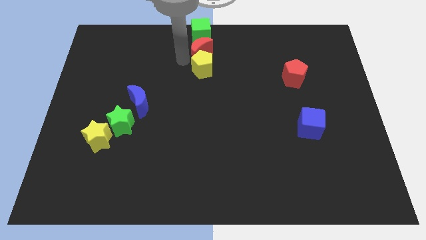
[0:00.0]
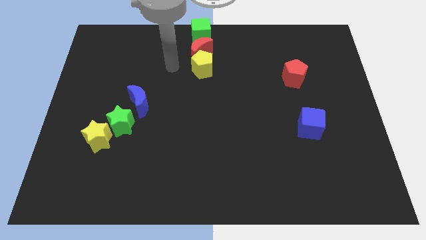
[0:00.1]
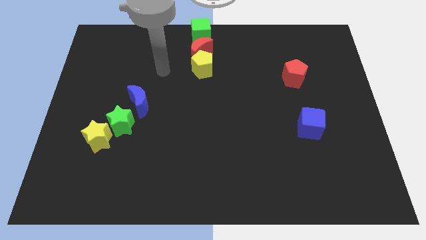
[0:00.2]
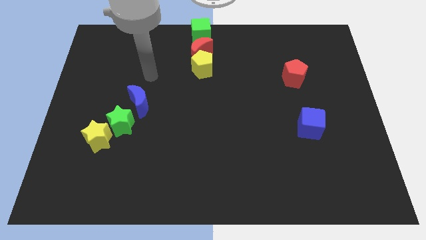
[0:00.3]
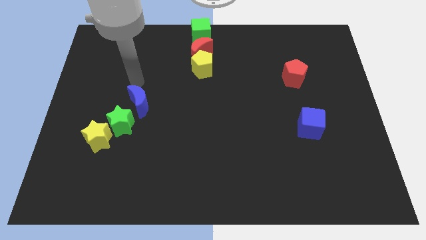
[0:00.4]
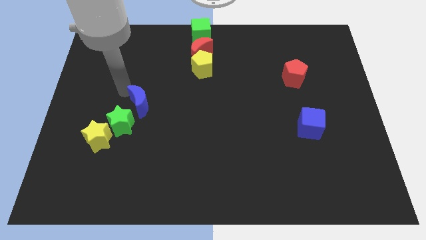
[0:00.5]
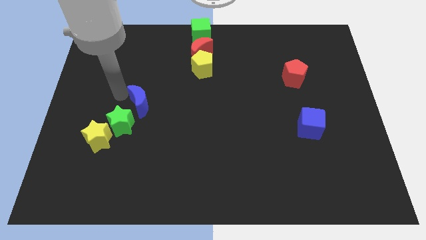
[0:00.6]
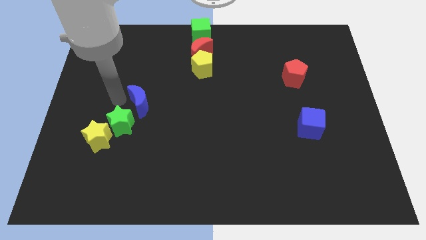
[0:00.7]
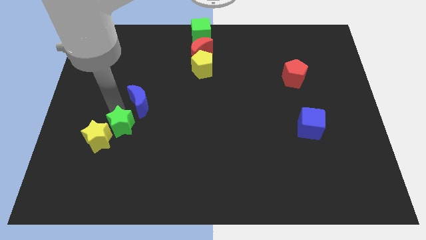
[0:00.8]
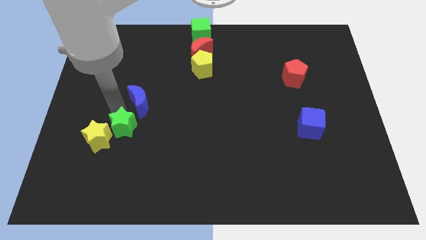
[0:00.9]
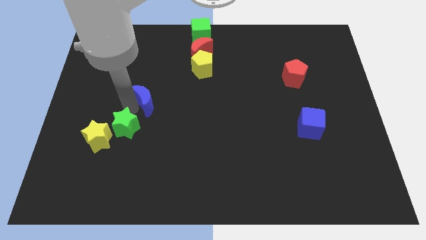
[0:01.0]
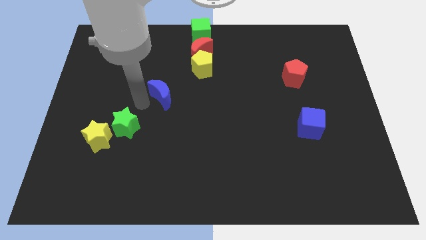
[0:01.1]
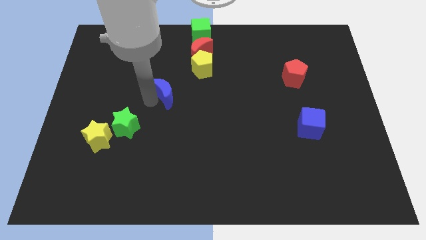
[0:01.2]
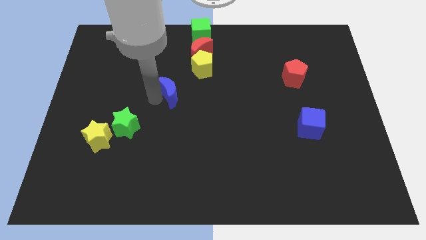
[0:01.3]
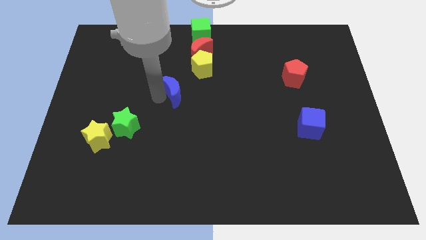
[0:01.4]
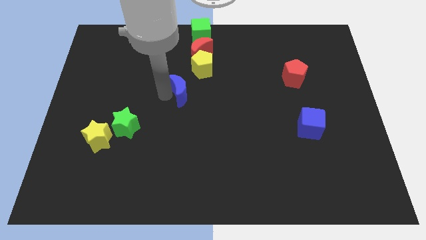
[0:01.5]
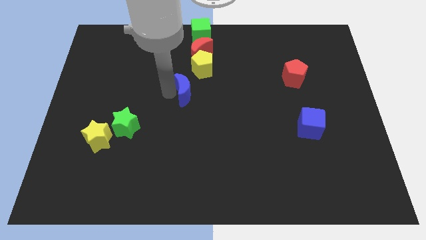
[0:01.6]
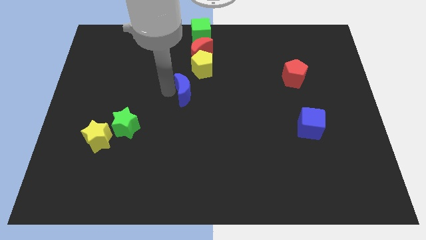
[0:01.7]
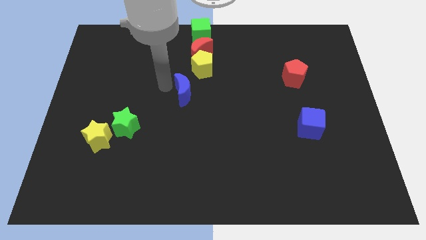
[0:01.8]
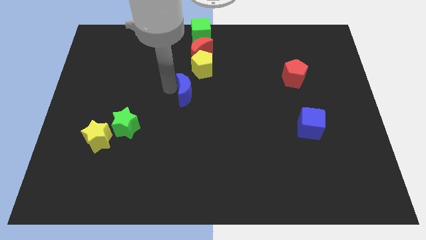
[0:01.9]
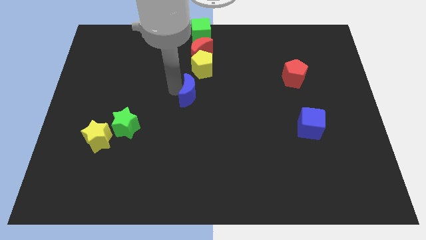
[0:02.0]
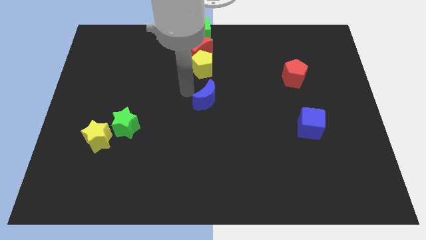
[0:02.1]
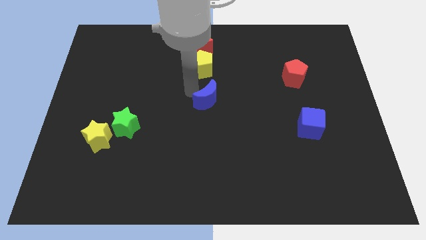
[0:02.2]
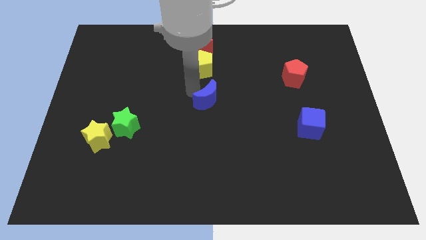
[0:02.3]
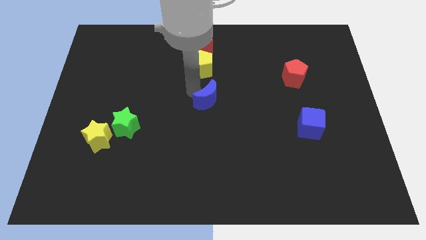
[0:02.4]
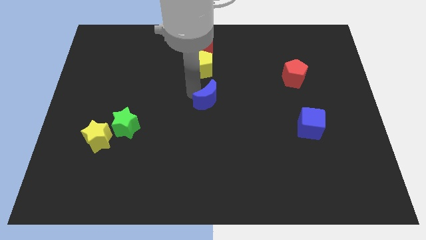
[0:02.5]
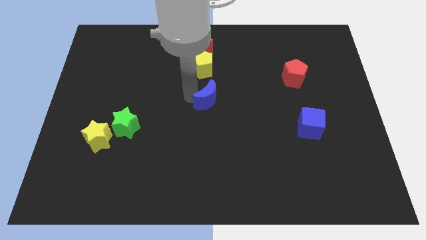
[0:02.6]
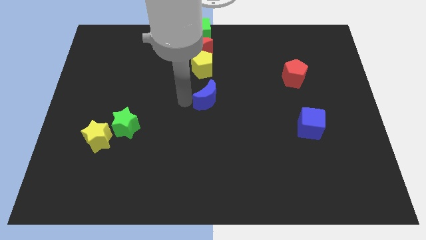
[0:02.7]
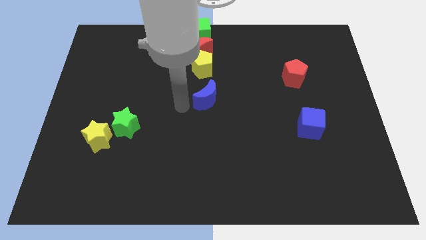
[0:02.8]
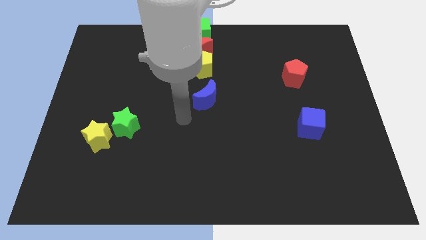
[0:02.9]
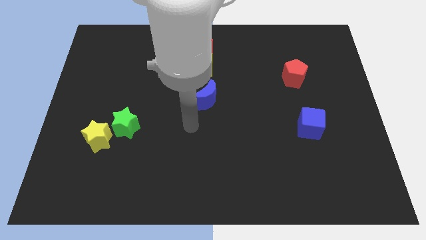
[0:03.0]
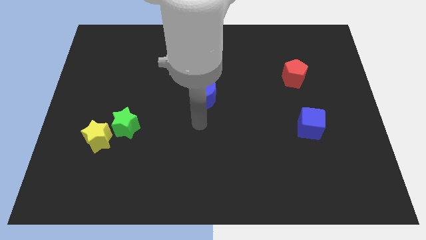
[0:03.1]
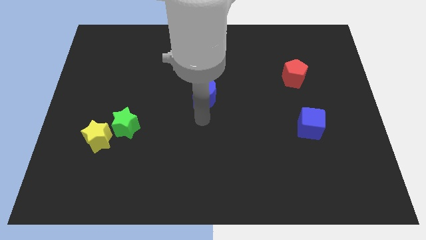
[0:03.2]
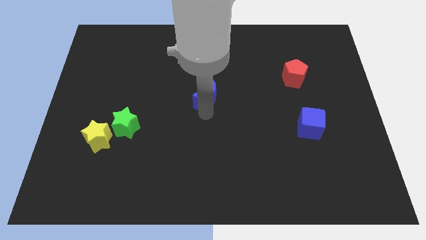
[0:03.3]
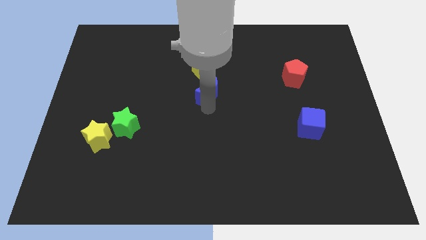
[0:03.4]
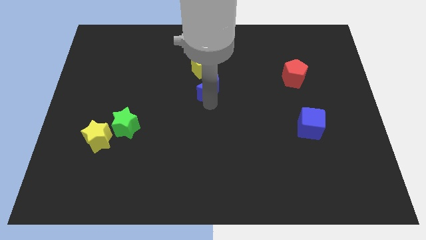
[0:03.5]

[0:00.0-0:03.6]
move the blue crescent towards right

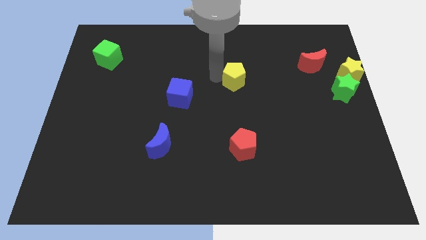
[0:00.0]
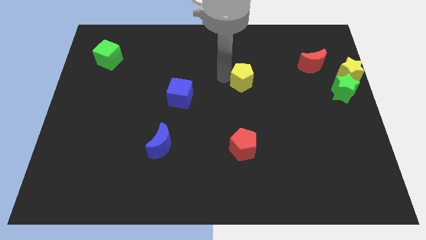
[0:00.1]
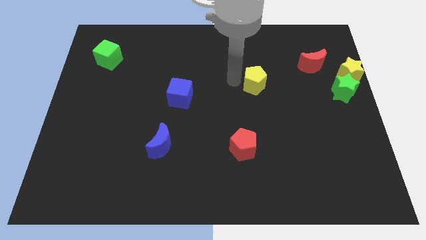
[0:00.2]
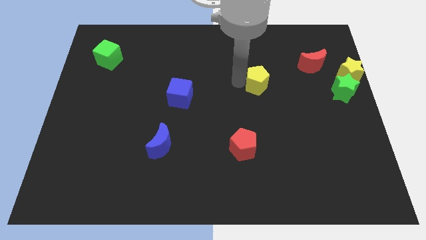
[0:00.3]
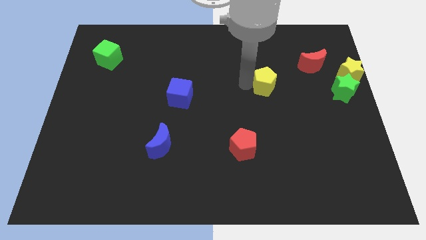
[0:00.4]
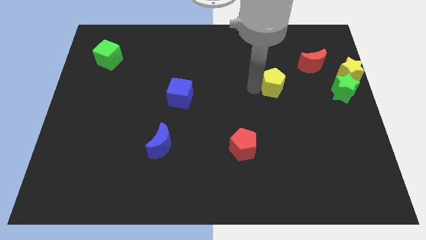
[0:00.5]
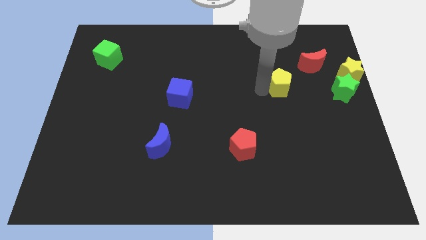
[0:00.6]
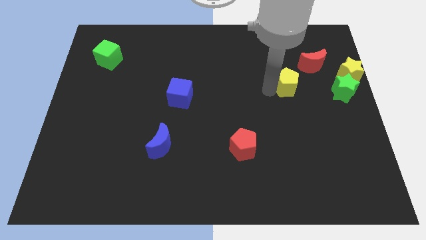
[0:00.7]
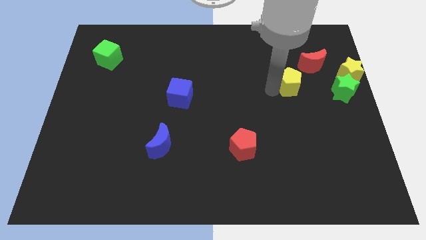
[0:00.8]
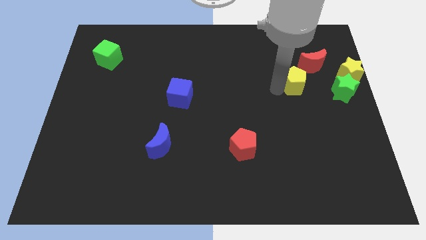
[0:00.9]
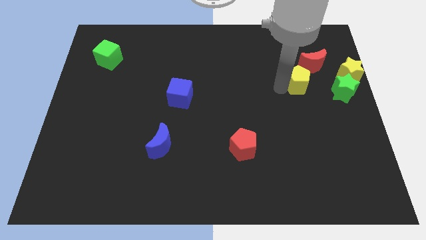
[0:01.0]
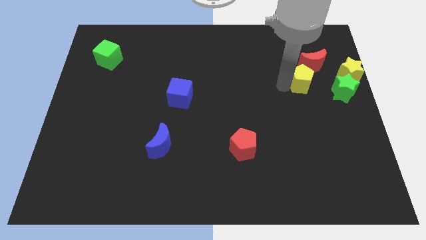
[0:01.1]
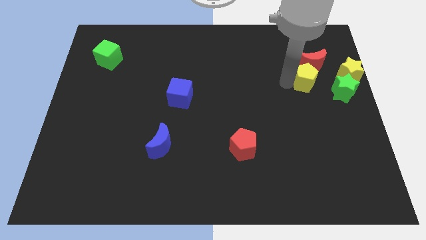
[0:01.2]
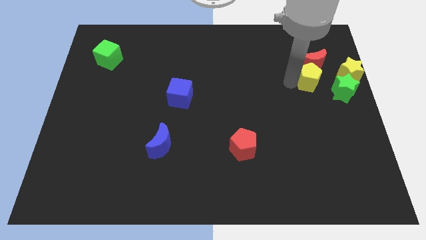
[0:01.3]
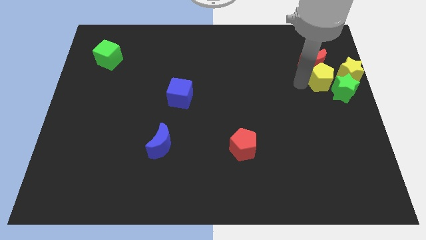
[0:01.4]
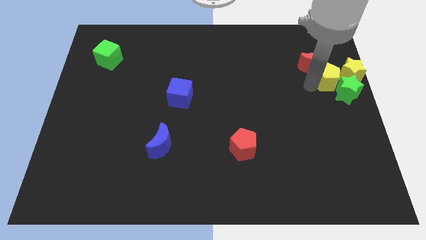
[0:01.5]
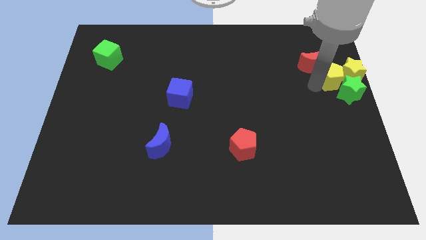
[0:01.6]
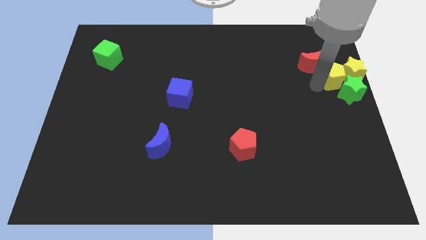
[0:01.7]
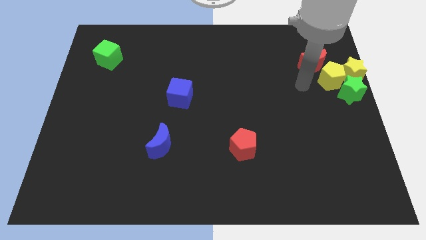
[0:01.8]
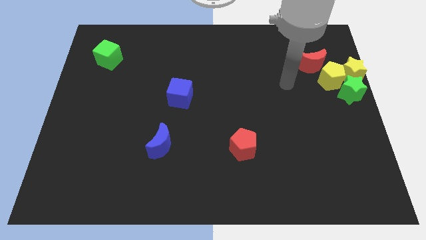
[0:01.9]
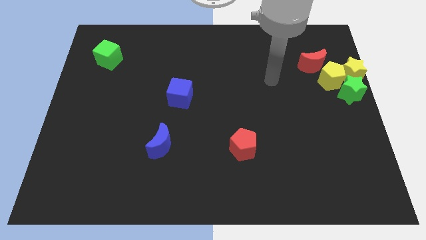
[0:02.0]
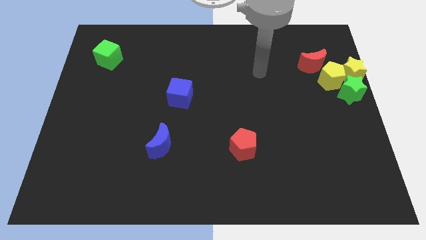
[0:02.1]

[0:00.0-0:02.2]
push yellow pentagon into yellow star

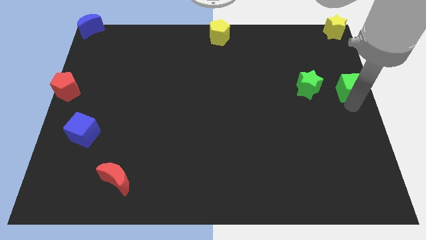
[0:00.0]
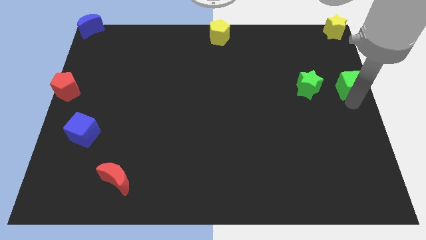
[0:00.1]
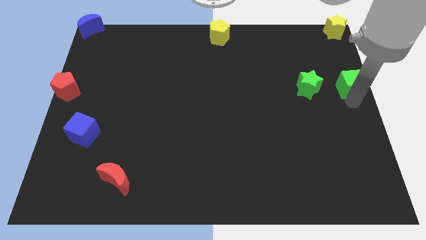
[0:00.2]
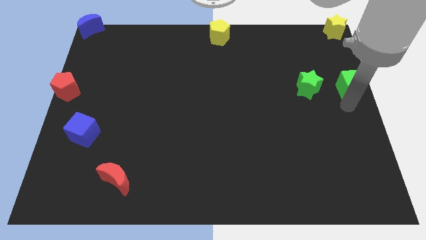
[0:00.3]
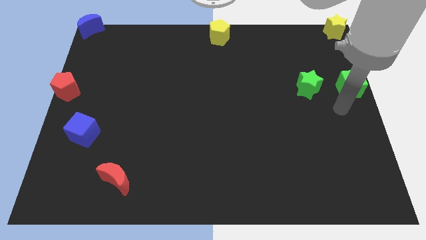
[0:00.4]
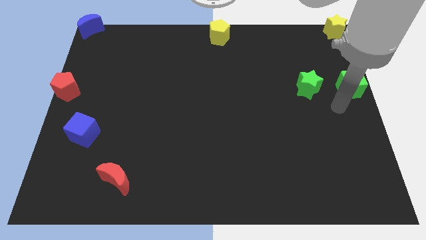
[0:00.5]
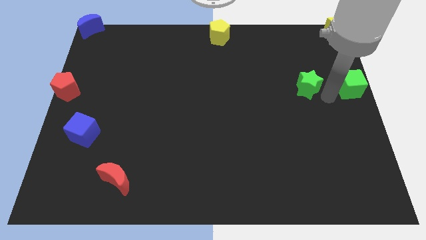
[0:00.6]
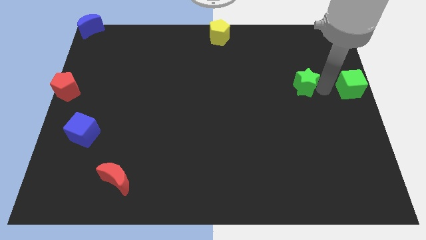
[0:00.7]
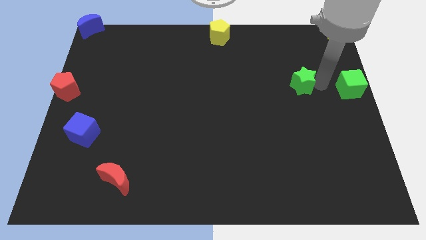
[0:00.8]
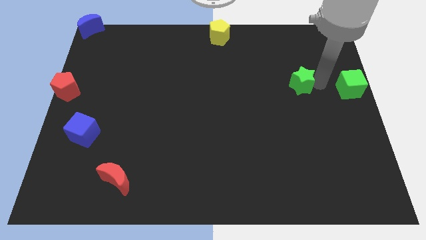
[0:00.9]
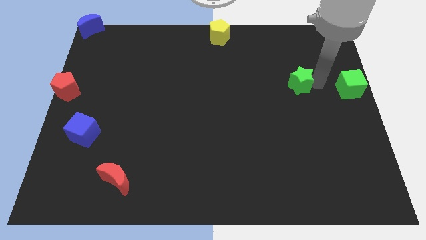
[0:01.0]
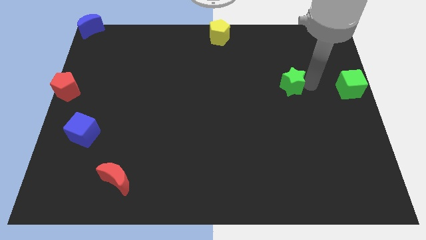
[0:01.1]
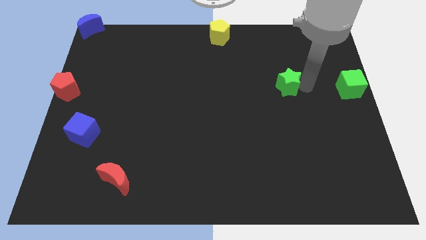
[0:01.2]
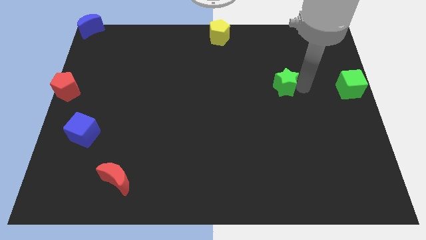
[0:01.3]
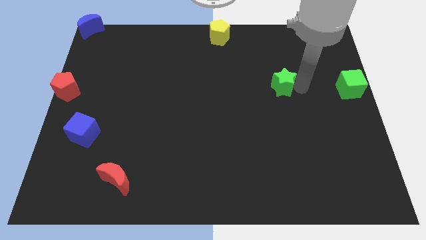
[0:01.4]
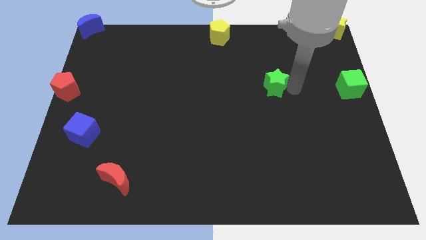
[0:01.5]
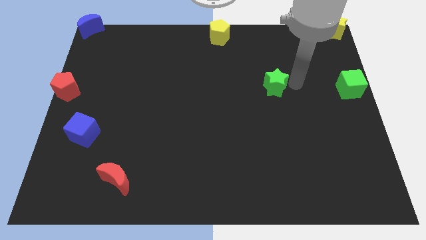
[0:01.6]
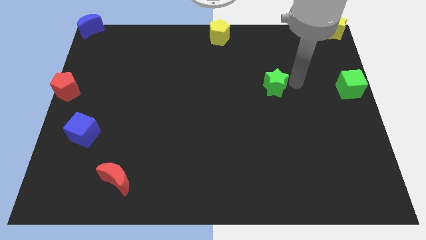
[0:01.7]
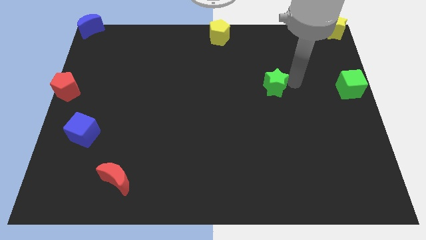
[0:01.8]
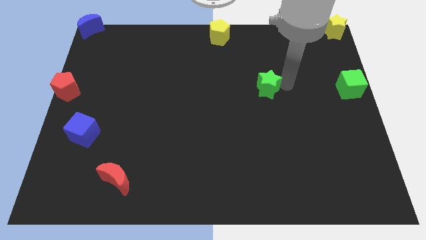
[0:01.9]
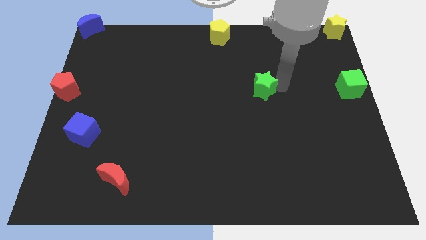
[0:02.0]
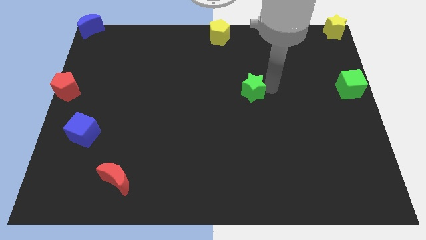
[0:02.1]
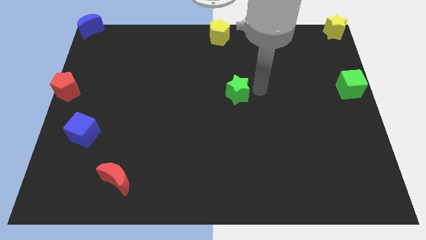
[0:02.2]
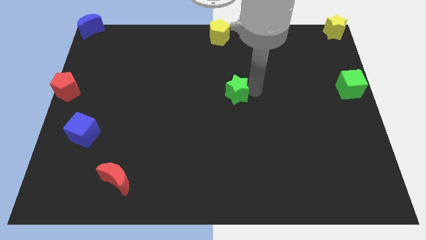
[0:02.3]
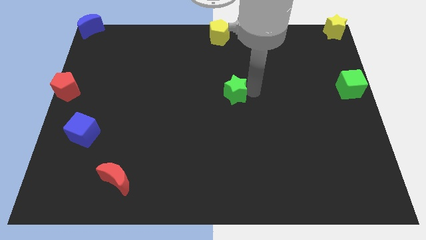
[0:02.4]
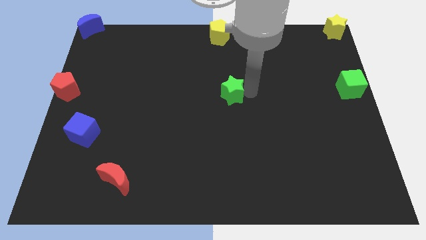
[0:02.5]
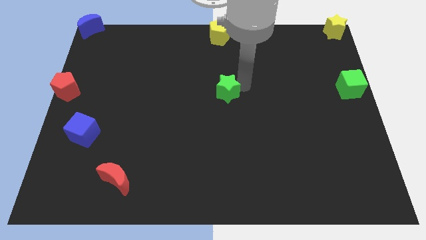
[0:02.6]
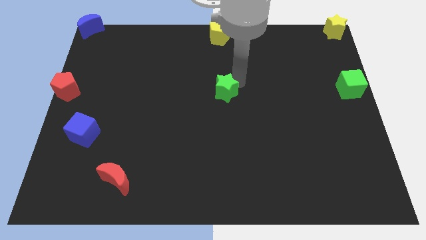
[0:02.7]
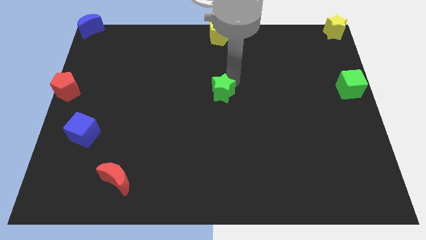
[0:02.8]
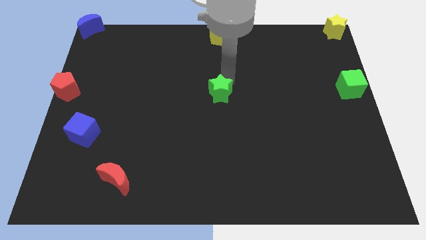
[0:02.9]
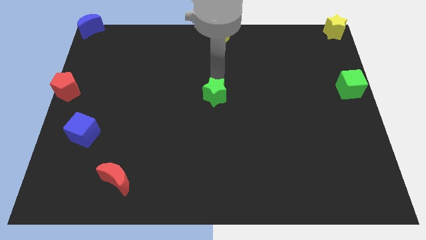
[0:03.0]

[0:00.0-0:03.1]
push green star below yellow pentagon
